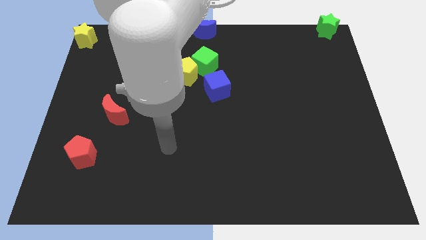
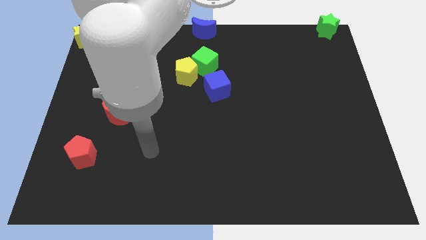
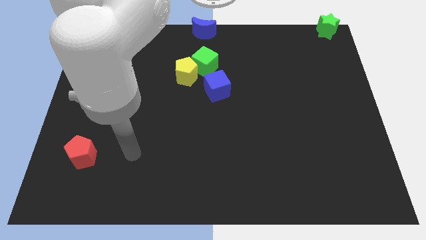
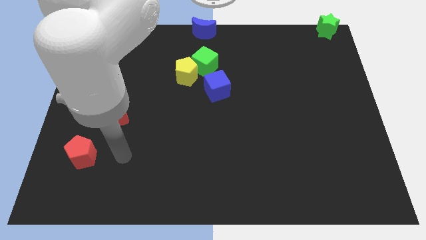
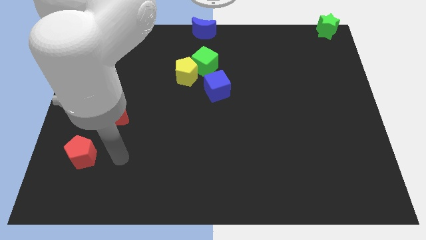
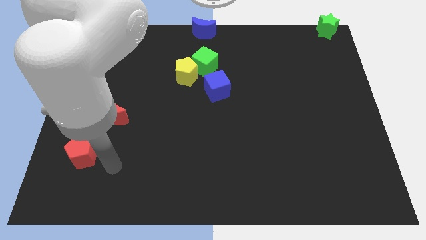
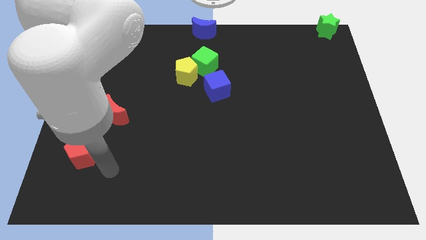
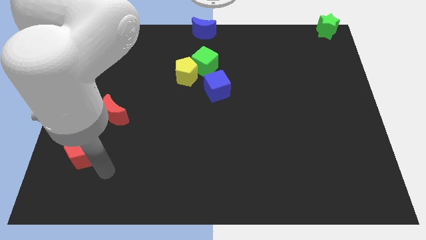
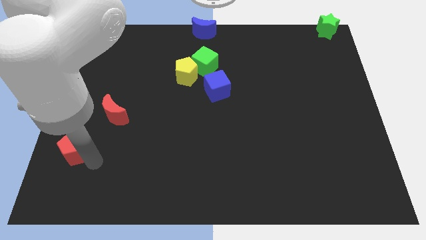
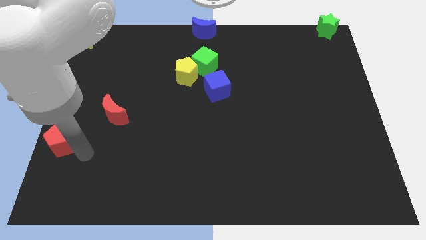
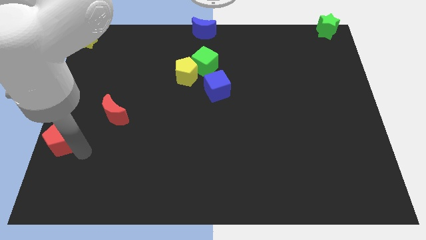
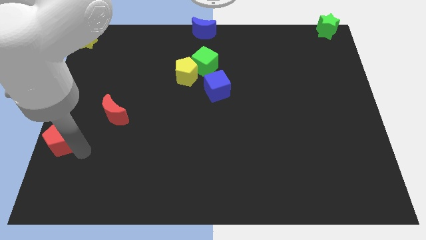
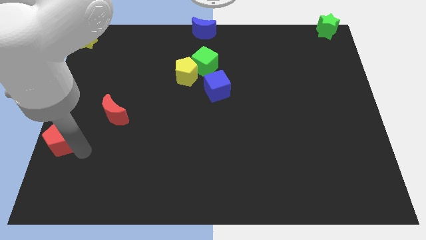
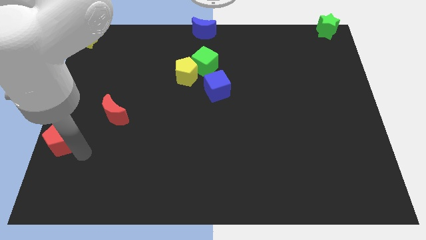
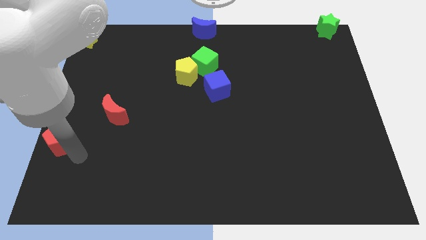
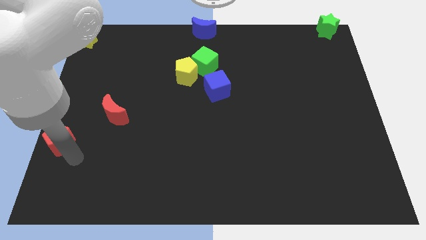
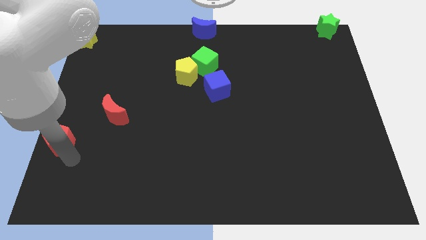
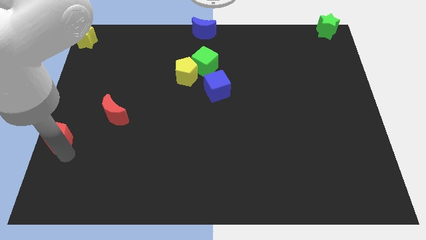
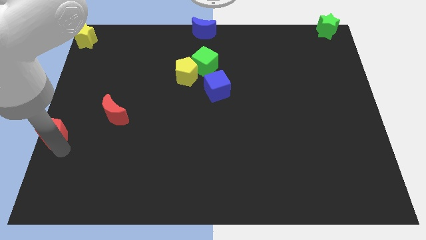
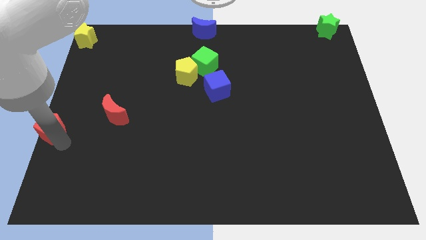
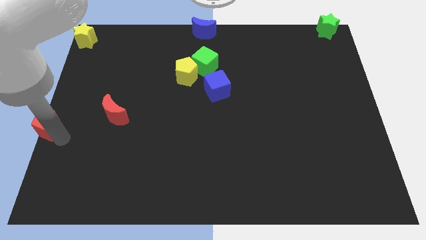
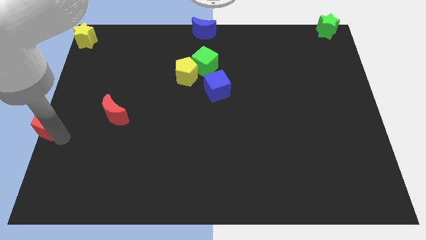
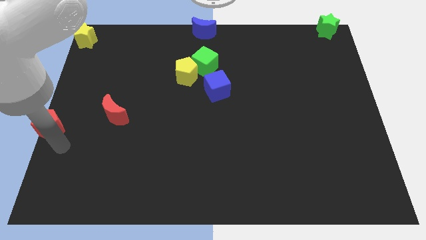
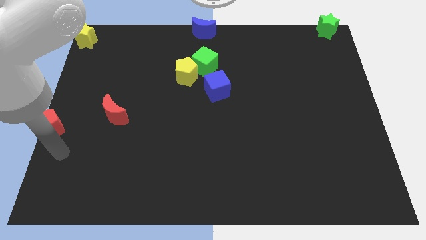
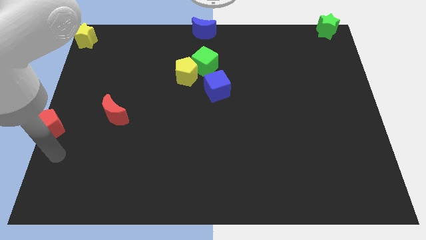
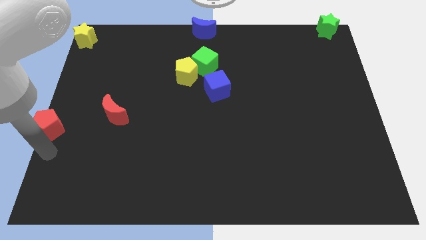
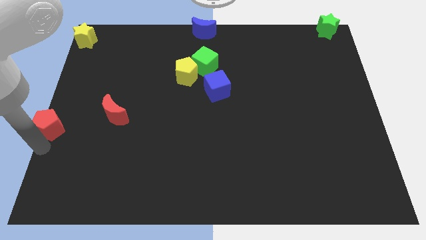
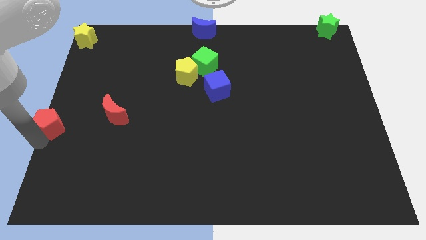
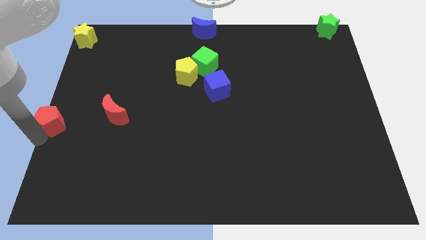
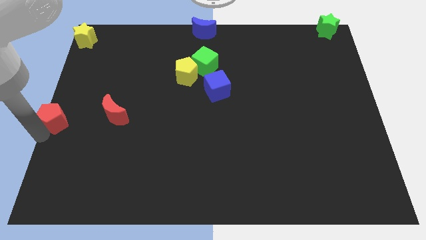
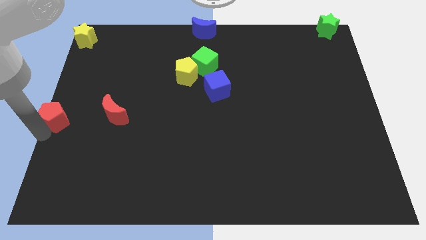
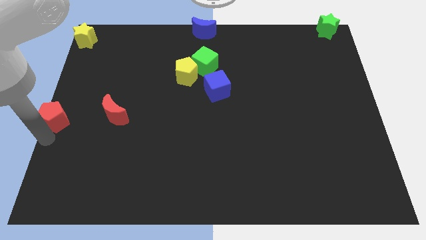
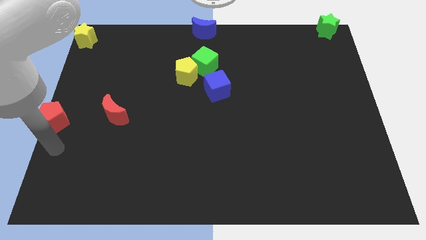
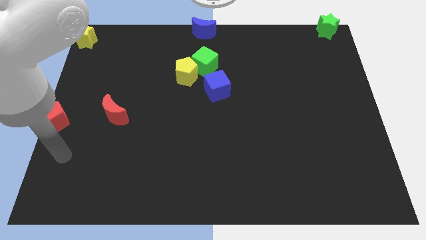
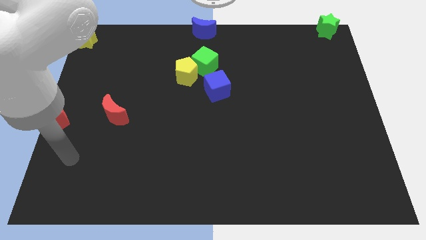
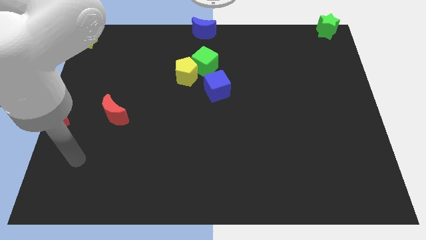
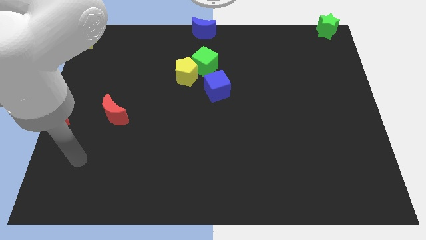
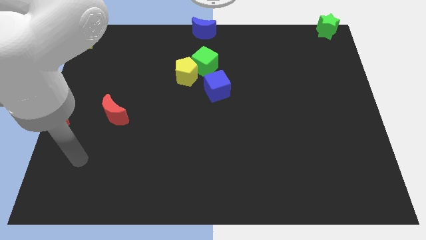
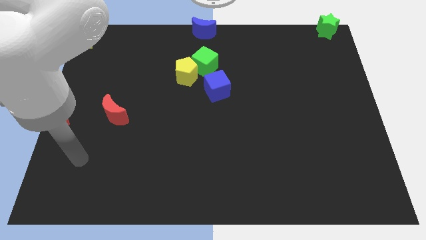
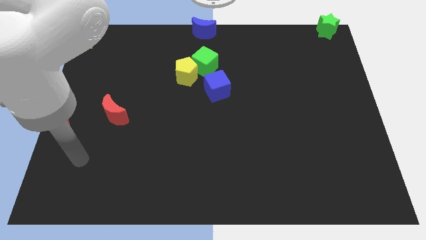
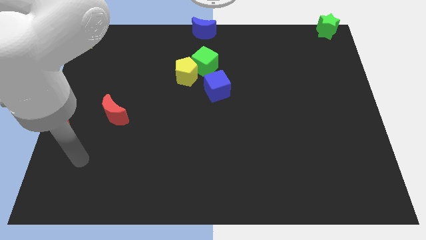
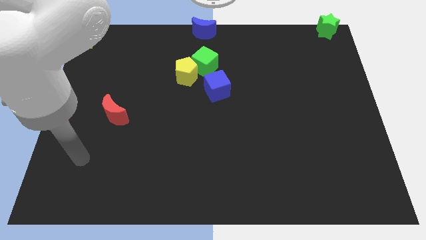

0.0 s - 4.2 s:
place the red pentagon to center left of the board

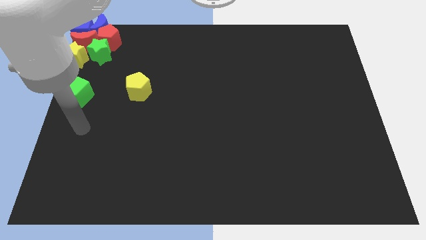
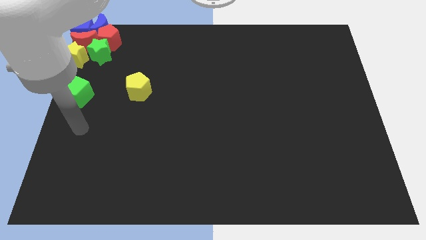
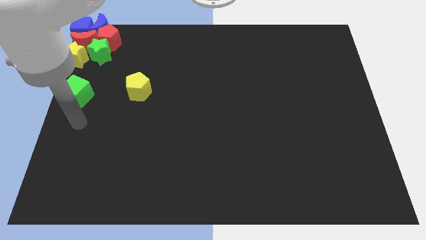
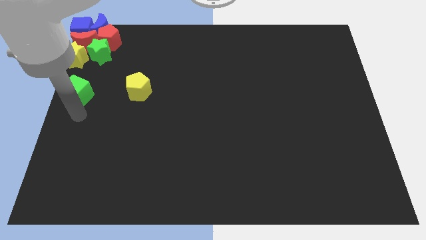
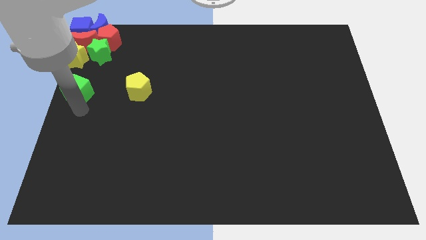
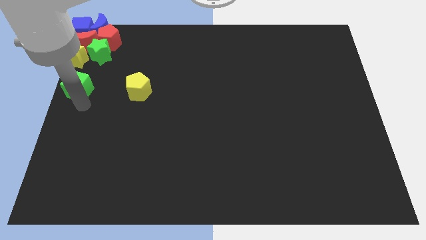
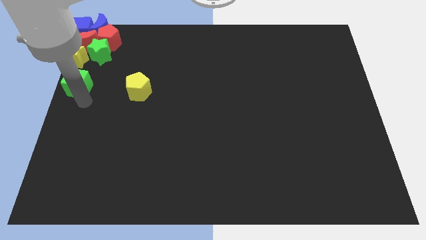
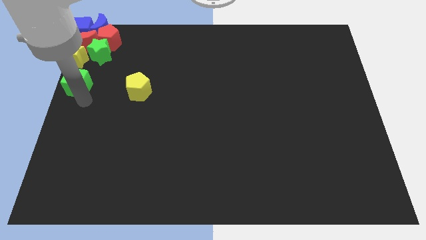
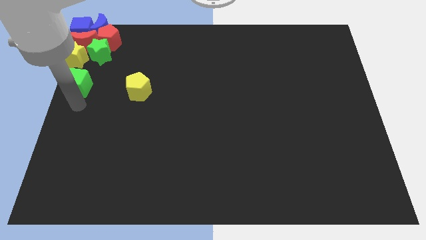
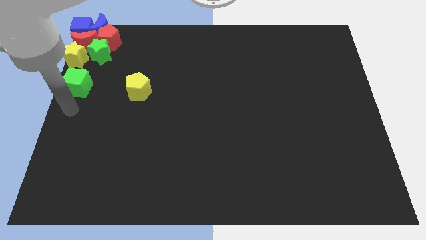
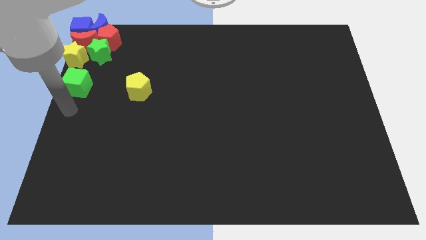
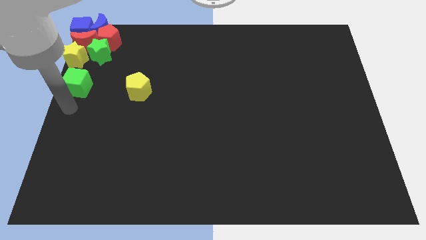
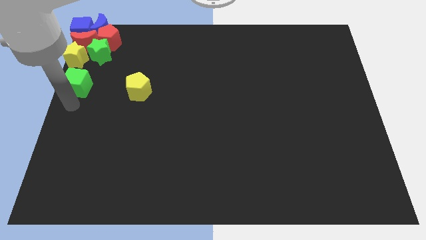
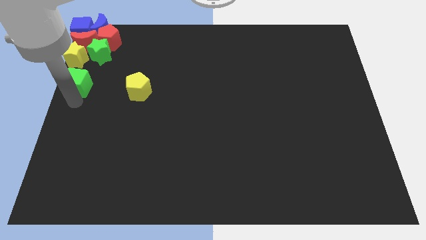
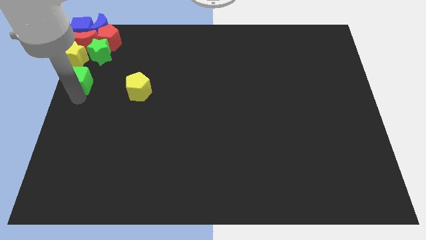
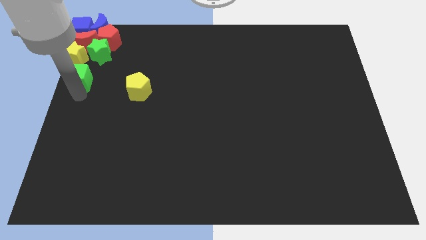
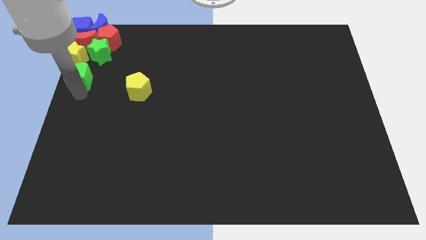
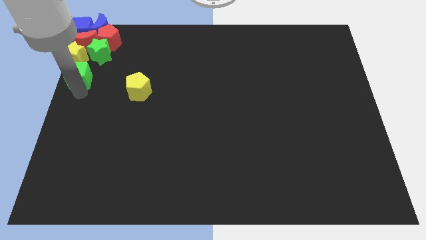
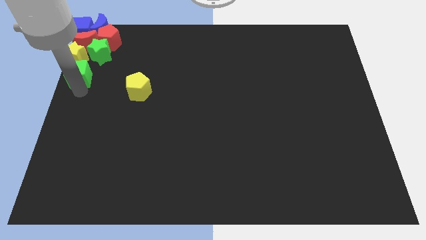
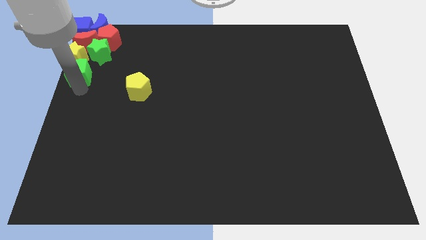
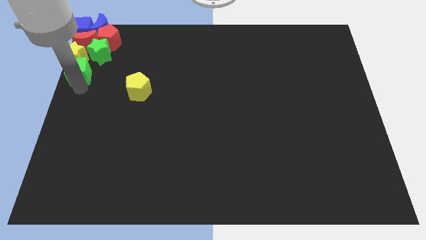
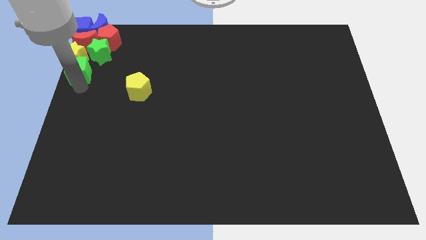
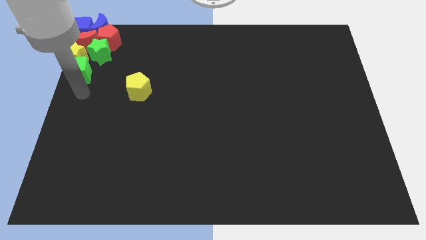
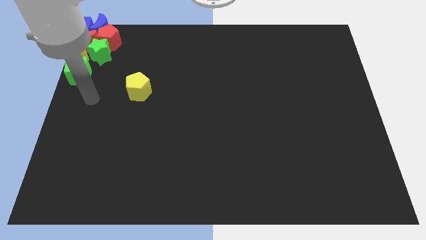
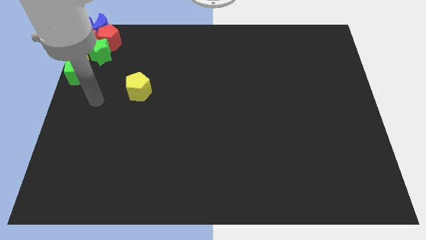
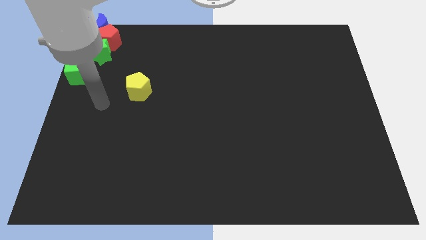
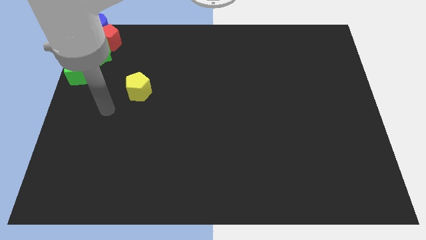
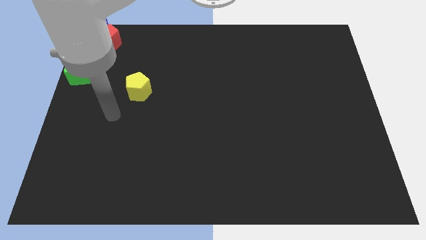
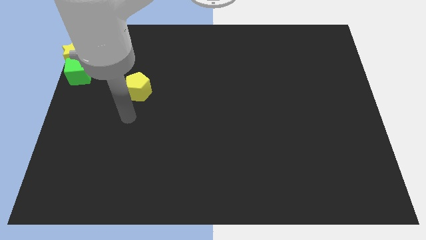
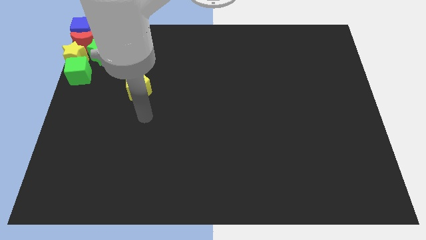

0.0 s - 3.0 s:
move the green cube into the yellow star

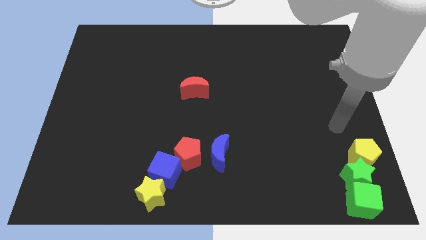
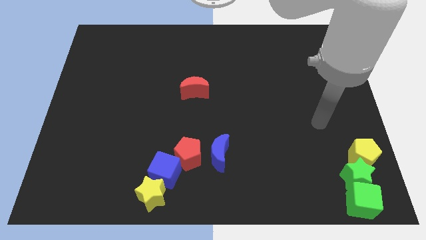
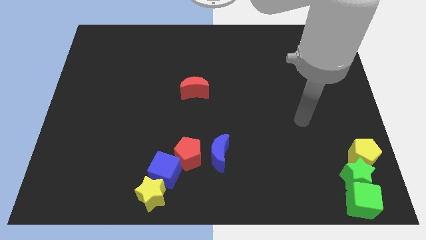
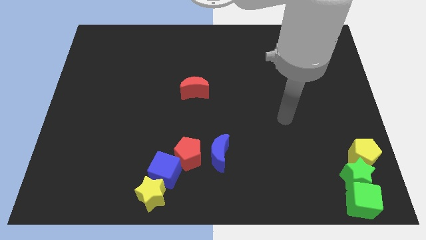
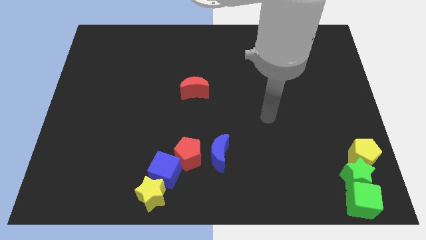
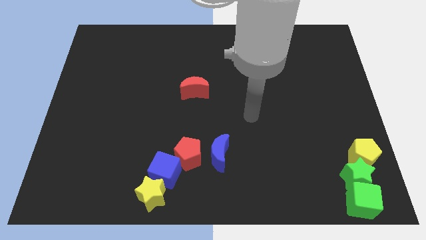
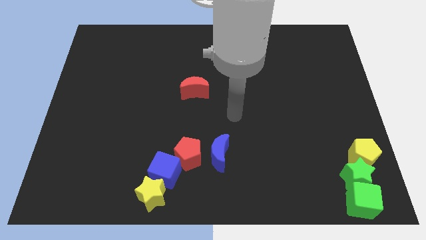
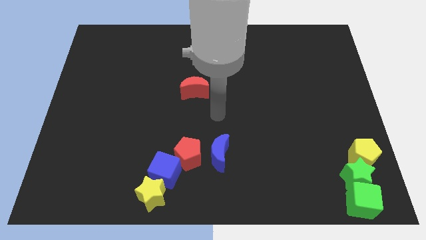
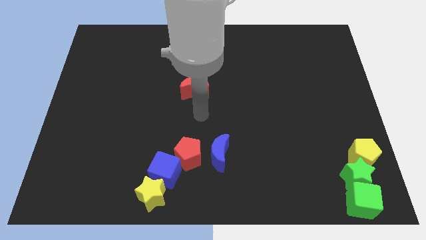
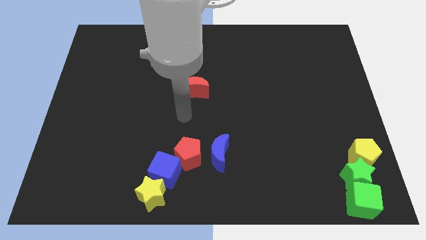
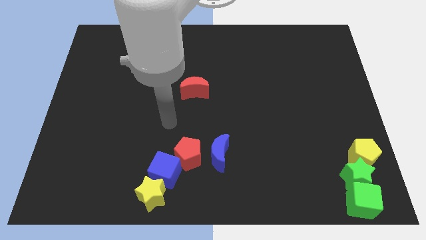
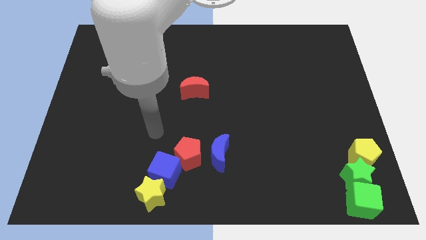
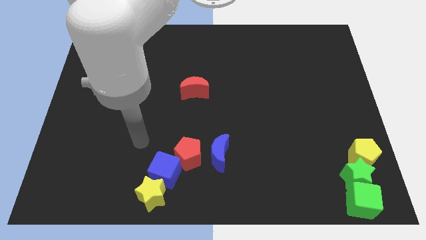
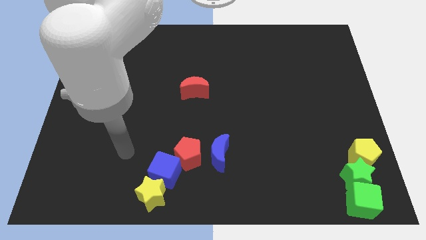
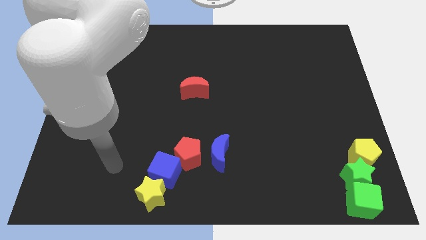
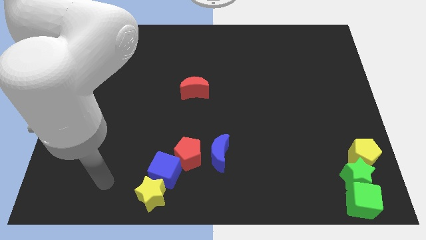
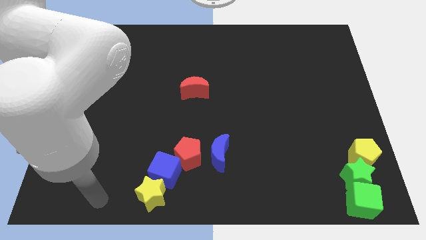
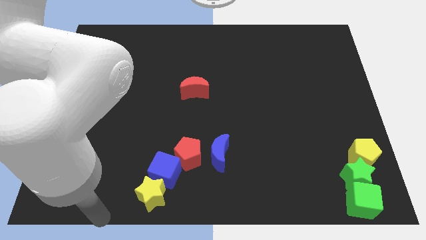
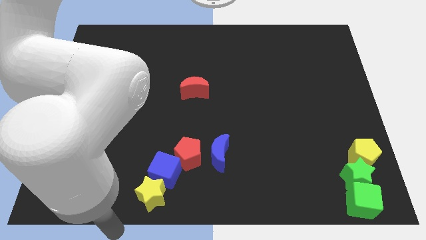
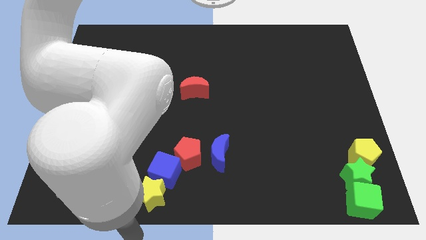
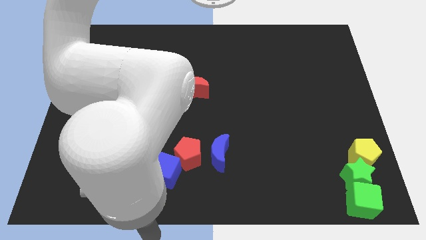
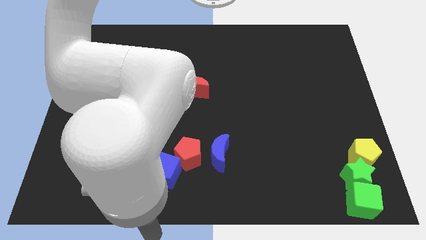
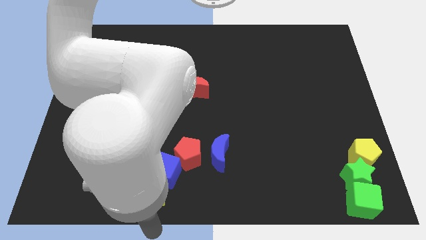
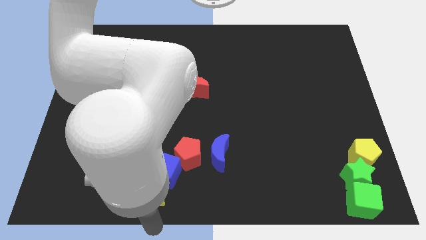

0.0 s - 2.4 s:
go near the yellow star
